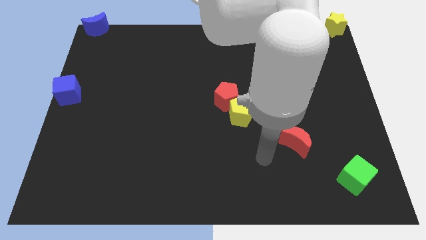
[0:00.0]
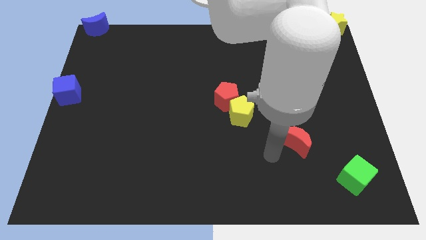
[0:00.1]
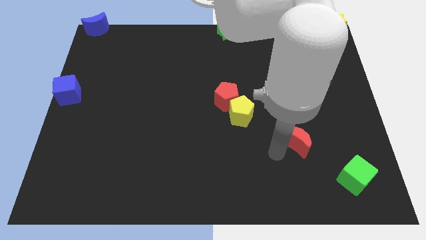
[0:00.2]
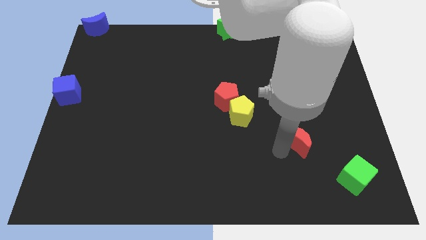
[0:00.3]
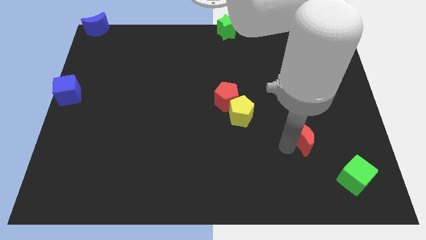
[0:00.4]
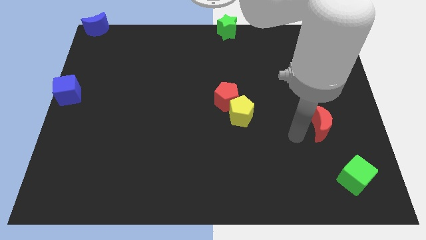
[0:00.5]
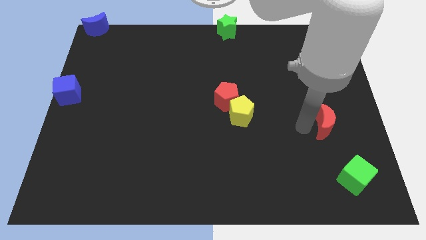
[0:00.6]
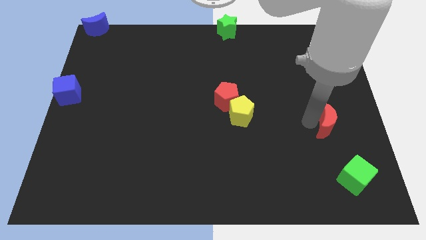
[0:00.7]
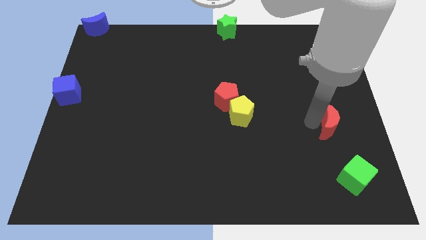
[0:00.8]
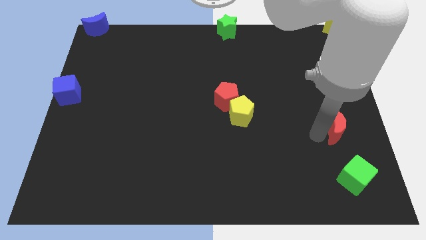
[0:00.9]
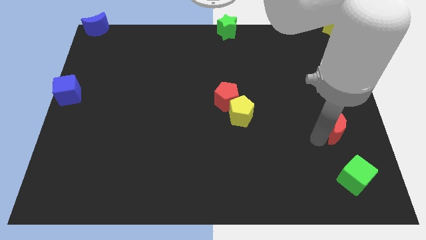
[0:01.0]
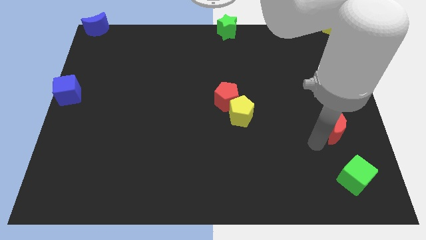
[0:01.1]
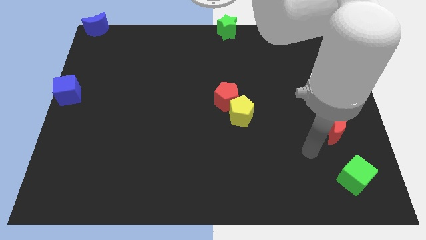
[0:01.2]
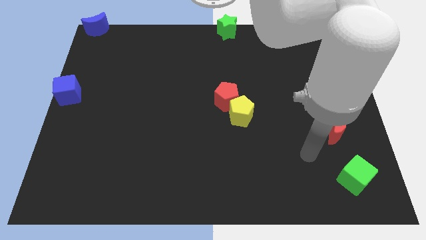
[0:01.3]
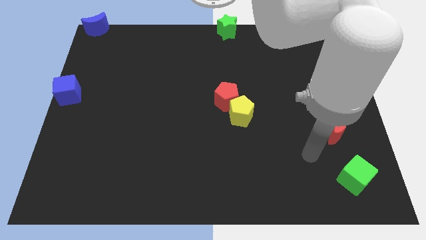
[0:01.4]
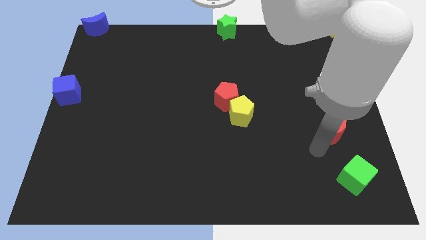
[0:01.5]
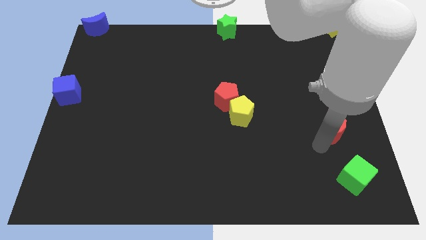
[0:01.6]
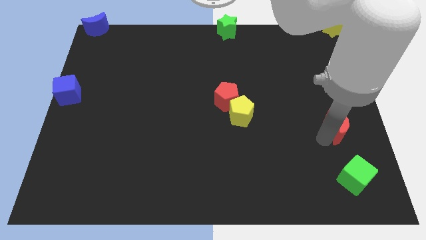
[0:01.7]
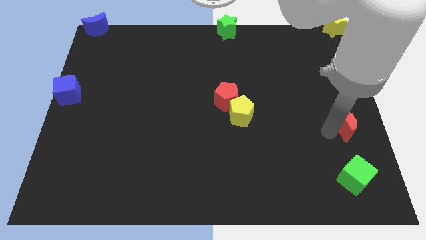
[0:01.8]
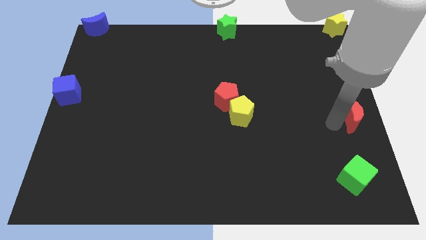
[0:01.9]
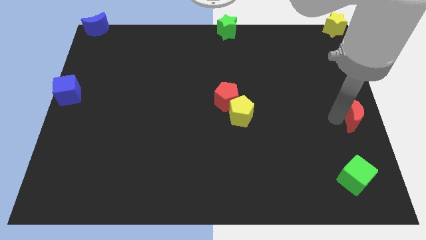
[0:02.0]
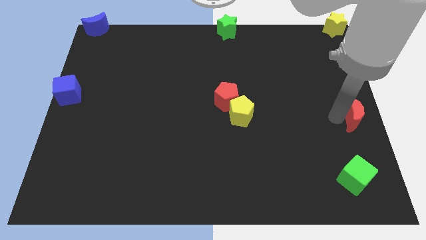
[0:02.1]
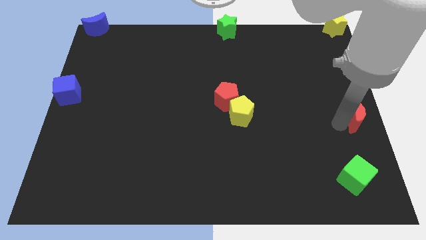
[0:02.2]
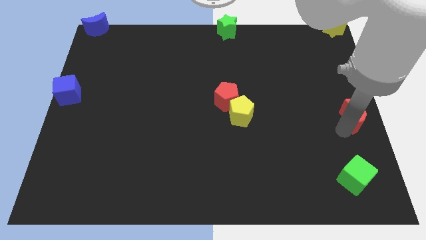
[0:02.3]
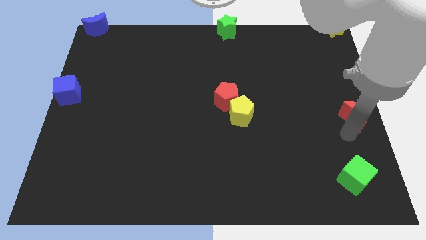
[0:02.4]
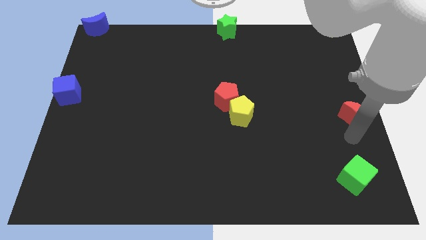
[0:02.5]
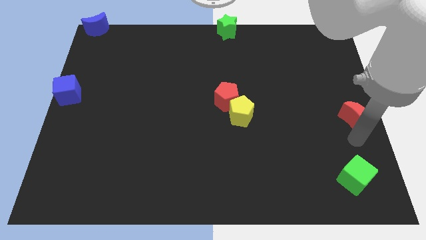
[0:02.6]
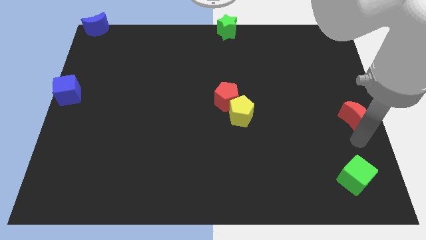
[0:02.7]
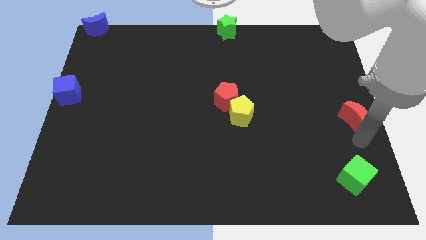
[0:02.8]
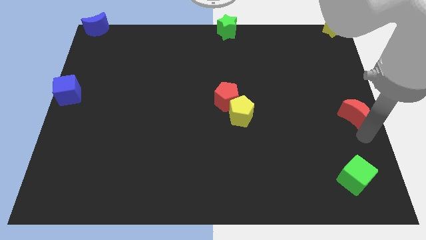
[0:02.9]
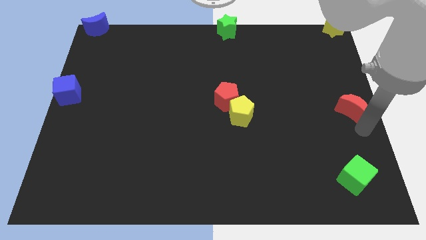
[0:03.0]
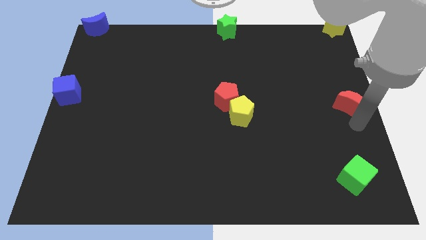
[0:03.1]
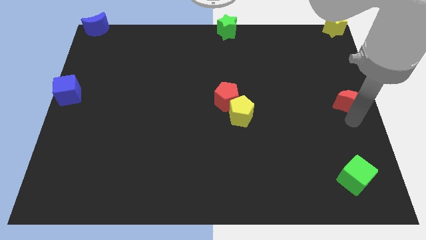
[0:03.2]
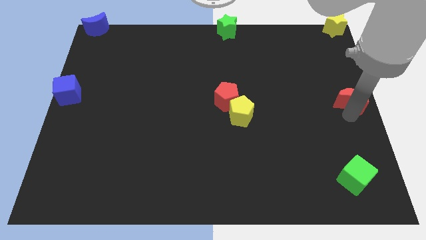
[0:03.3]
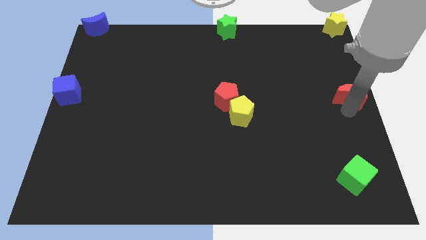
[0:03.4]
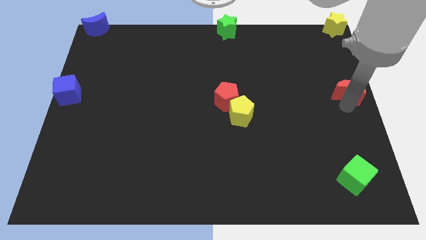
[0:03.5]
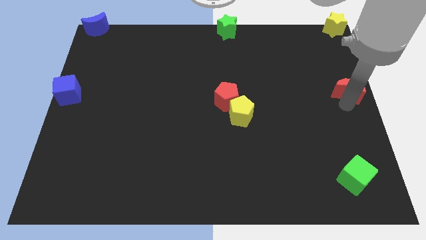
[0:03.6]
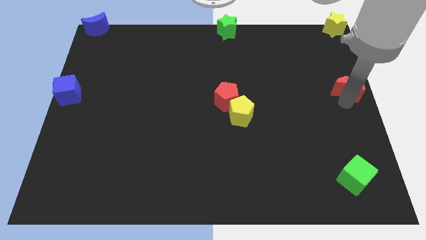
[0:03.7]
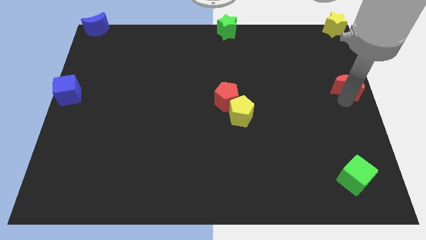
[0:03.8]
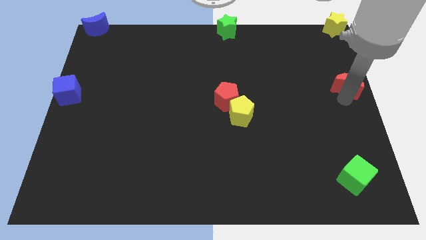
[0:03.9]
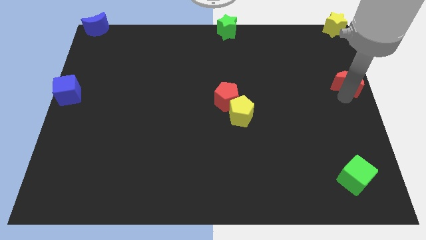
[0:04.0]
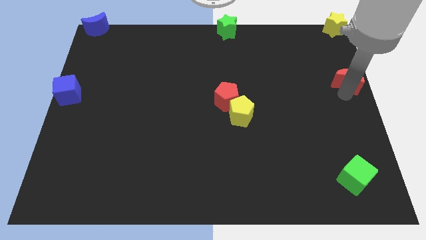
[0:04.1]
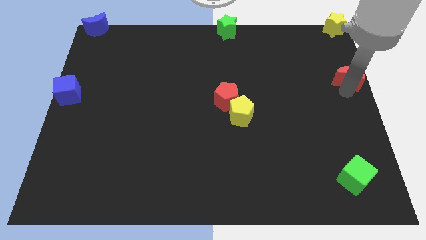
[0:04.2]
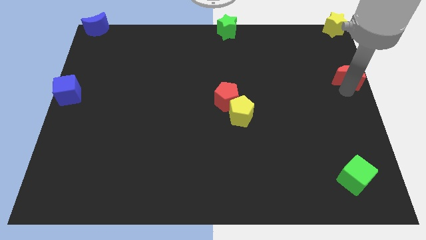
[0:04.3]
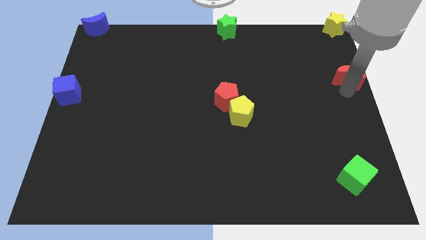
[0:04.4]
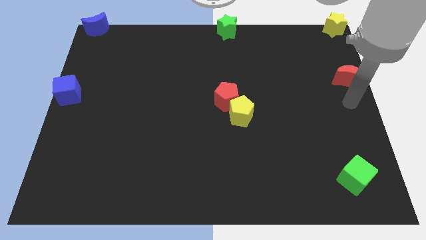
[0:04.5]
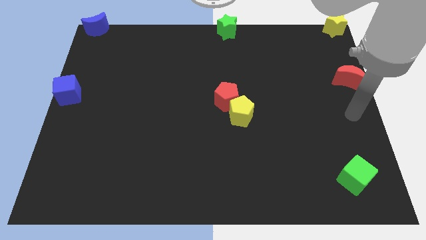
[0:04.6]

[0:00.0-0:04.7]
move the red crescent to the right center of the board

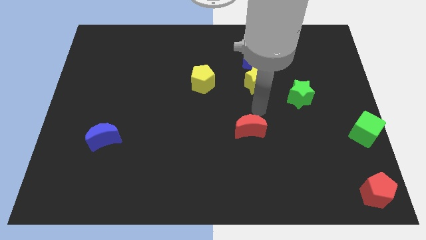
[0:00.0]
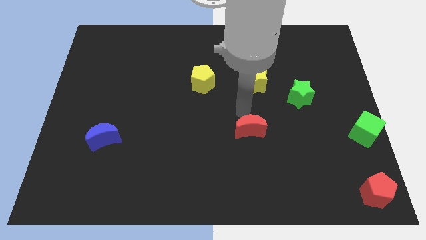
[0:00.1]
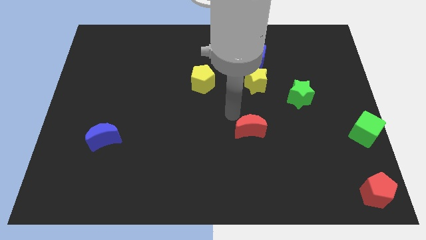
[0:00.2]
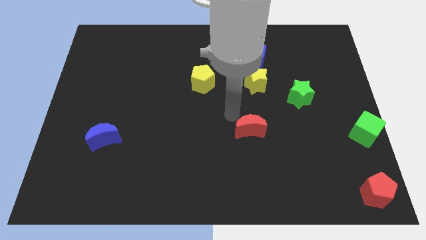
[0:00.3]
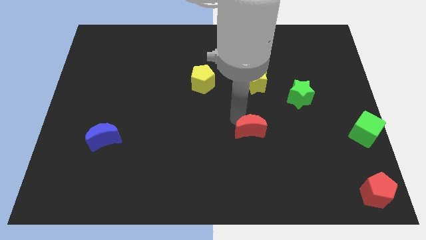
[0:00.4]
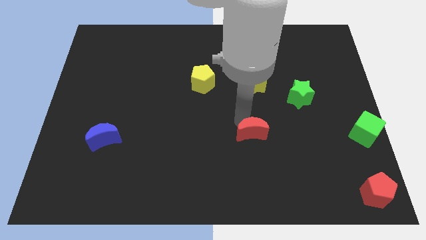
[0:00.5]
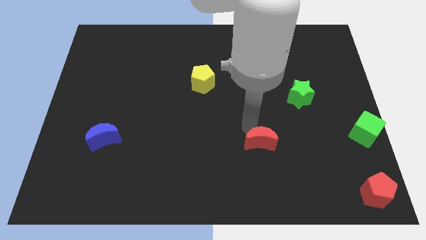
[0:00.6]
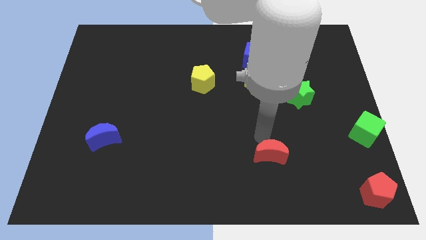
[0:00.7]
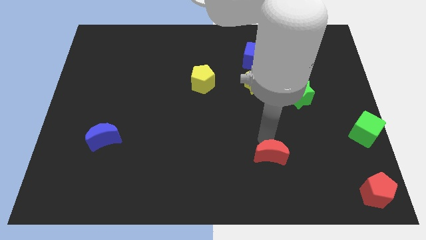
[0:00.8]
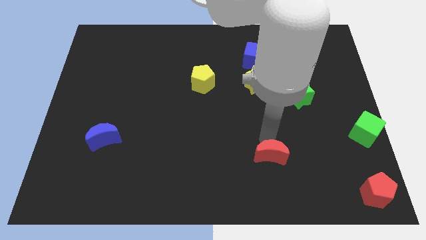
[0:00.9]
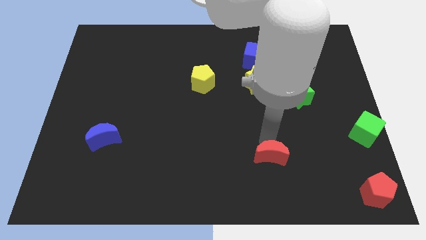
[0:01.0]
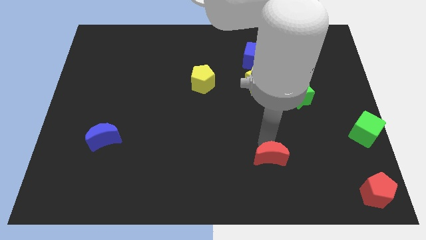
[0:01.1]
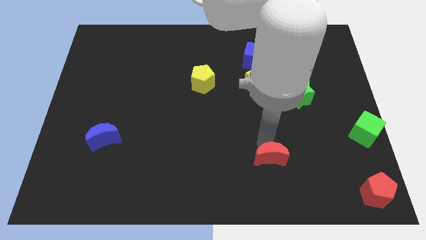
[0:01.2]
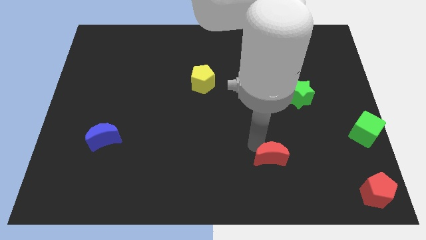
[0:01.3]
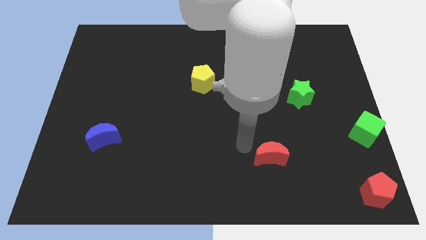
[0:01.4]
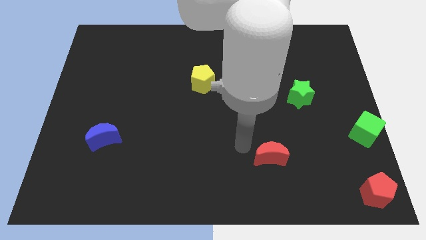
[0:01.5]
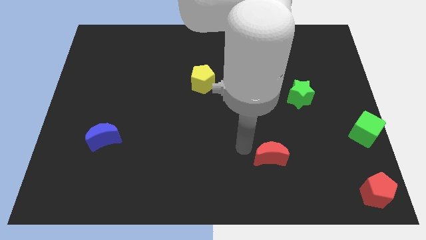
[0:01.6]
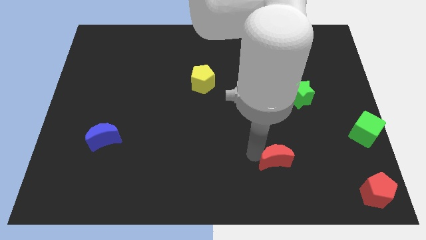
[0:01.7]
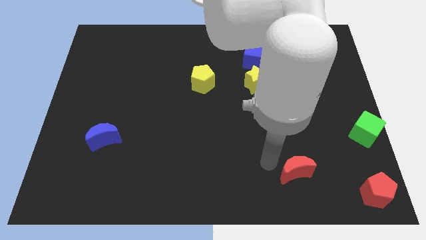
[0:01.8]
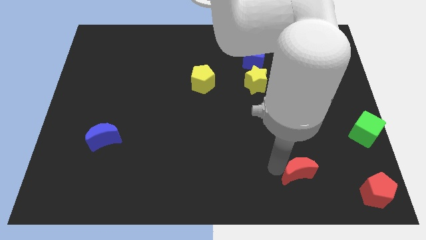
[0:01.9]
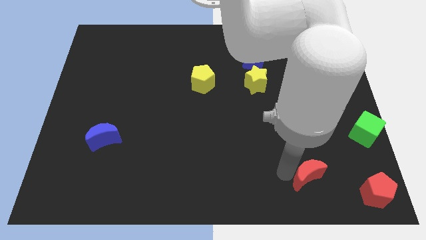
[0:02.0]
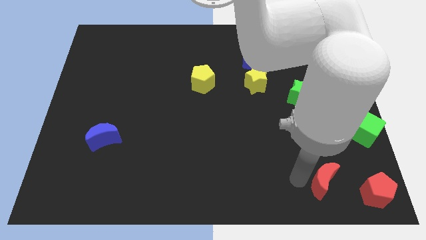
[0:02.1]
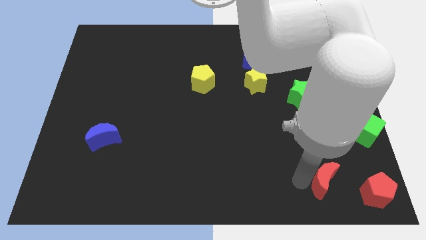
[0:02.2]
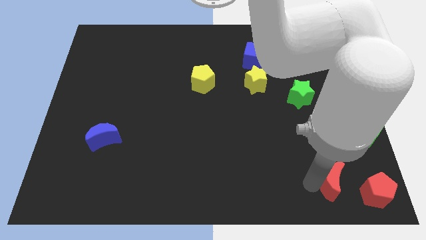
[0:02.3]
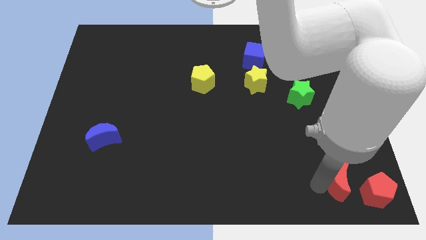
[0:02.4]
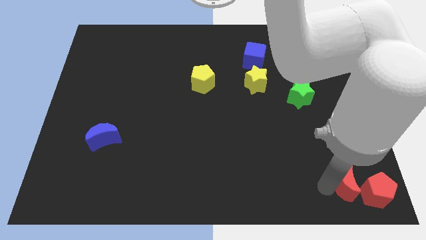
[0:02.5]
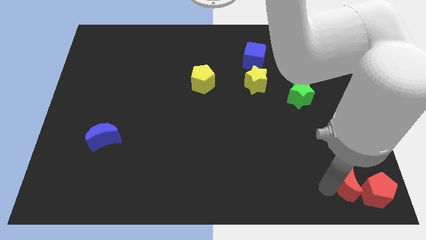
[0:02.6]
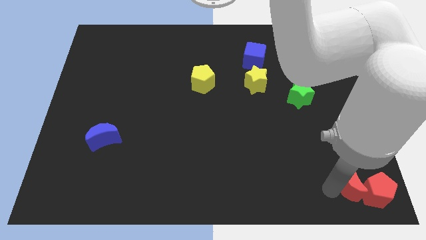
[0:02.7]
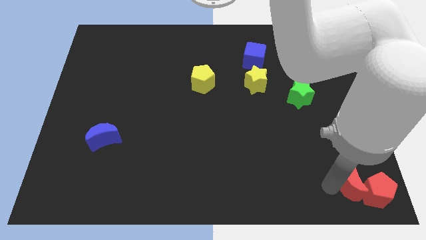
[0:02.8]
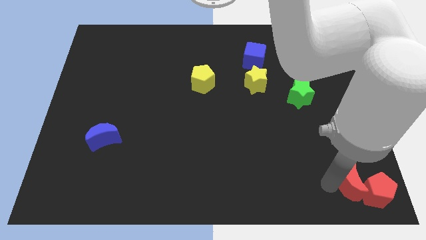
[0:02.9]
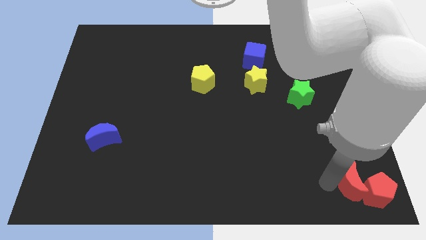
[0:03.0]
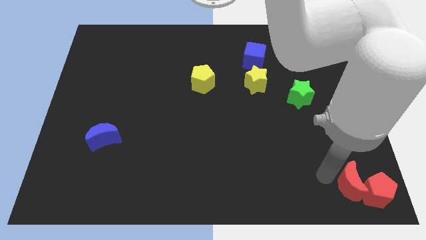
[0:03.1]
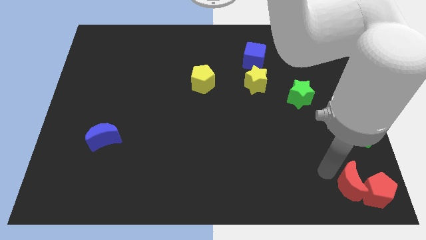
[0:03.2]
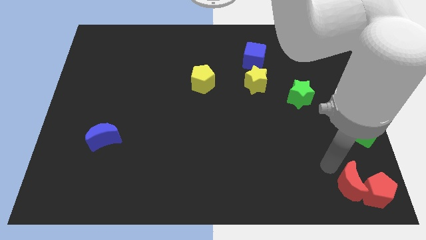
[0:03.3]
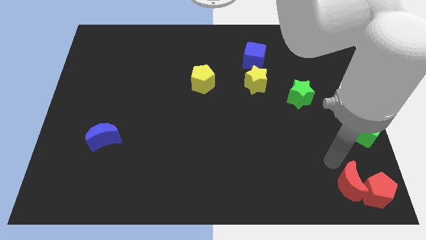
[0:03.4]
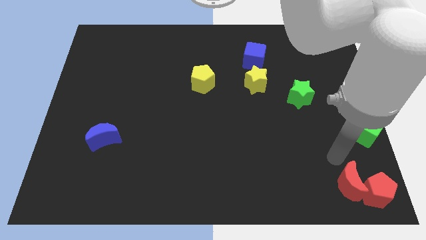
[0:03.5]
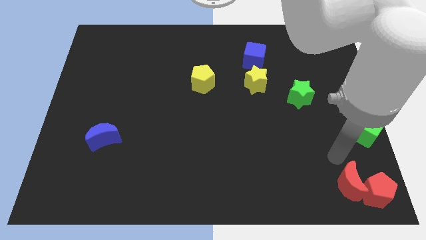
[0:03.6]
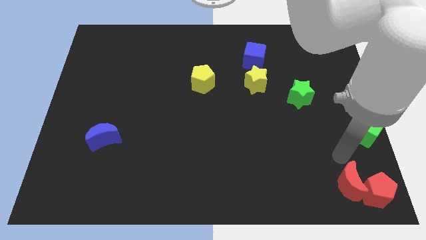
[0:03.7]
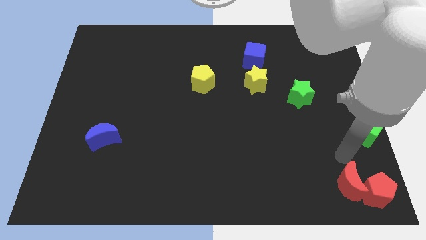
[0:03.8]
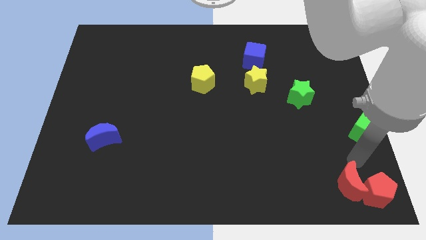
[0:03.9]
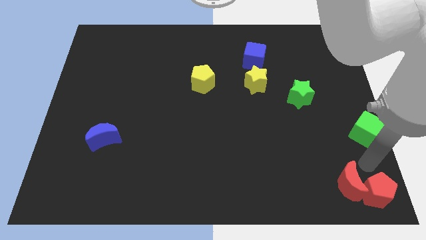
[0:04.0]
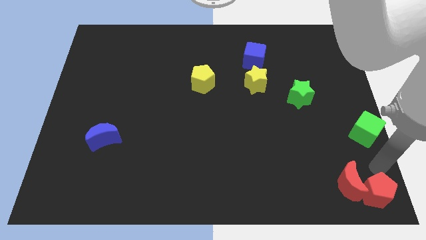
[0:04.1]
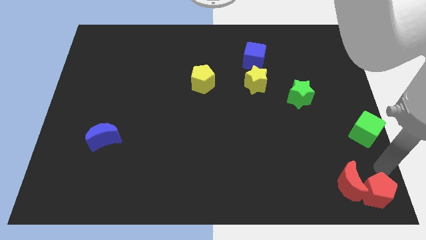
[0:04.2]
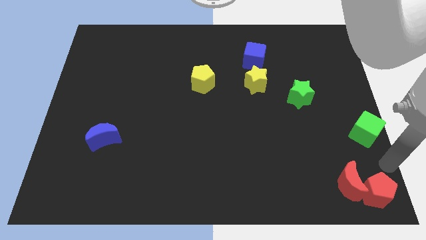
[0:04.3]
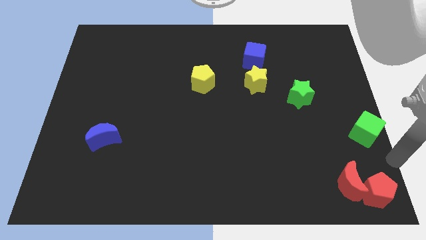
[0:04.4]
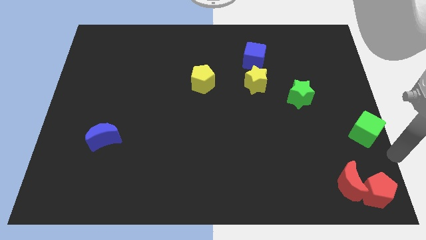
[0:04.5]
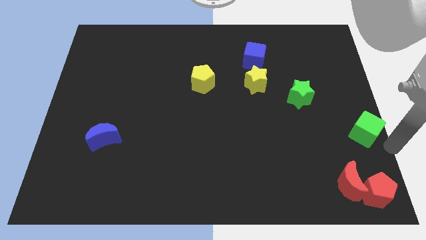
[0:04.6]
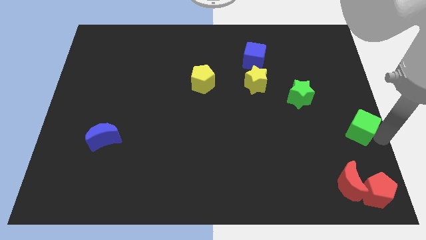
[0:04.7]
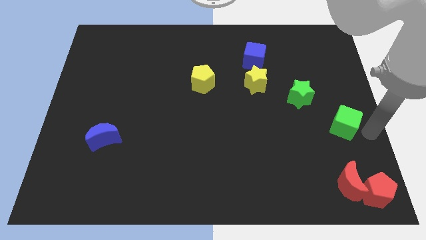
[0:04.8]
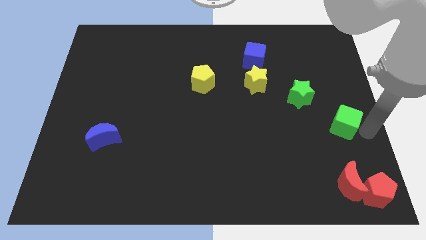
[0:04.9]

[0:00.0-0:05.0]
move the red crescent into the red pentagon
